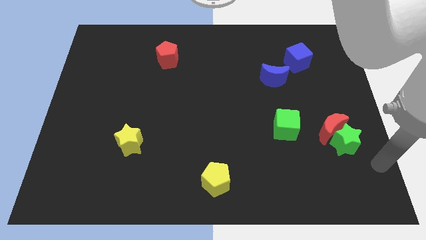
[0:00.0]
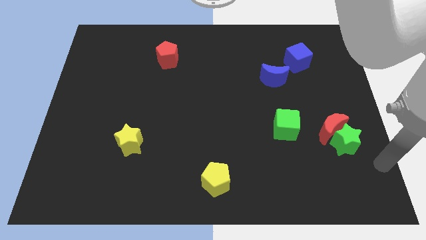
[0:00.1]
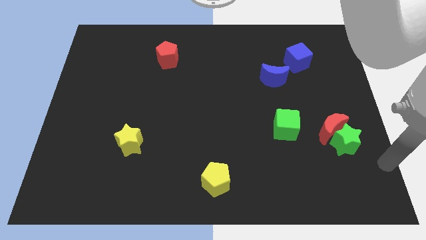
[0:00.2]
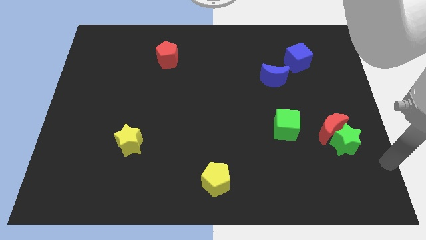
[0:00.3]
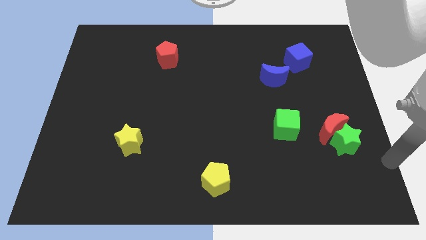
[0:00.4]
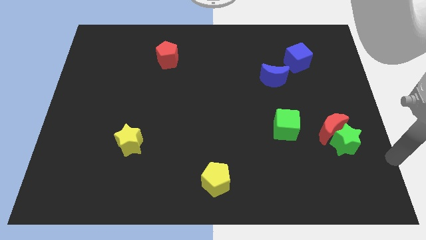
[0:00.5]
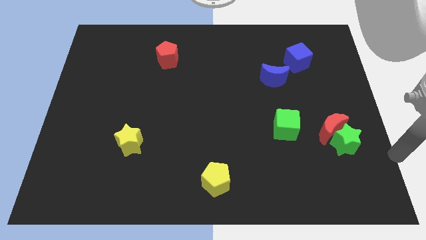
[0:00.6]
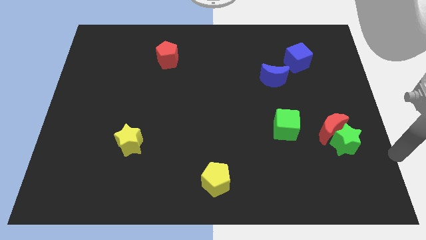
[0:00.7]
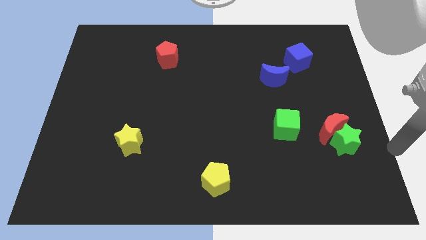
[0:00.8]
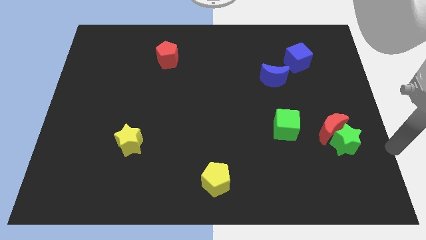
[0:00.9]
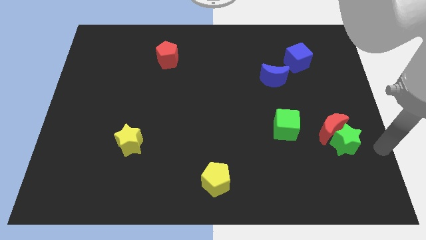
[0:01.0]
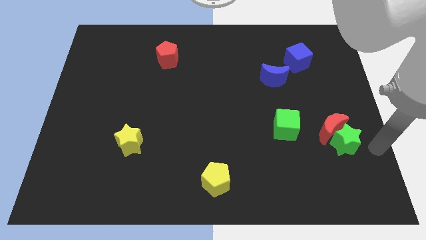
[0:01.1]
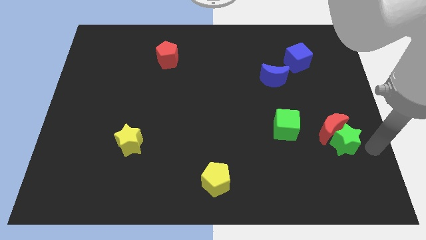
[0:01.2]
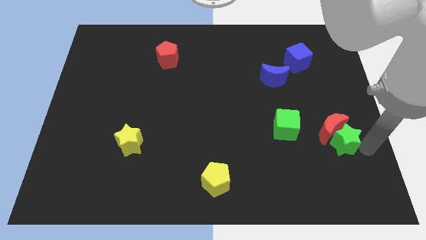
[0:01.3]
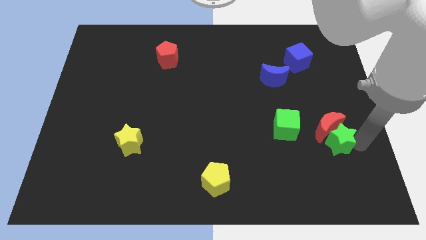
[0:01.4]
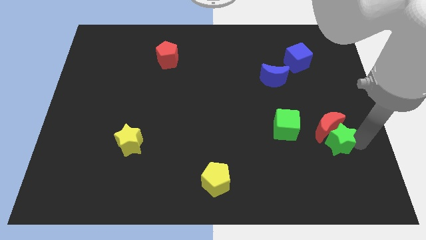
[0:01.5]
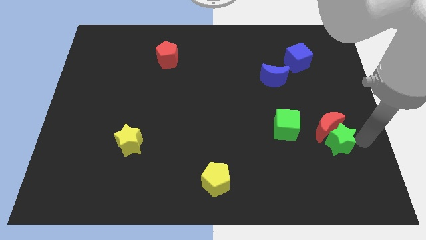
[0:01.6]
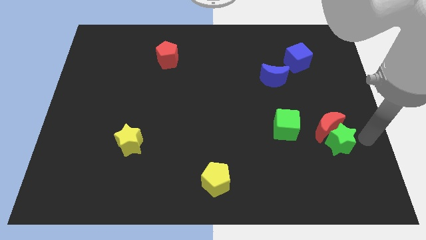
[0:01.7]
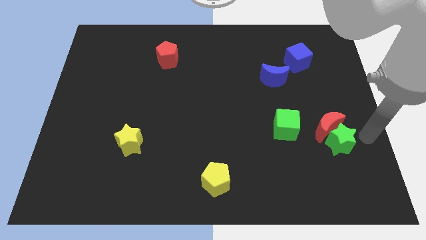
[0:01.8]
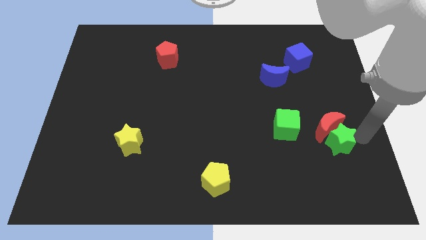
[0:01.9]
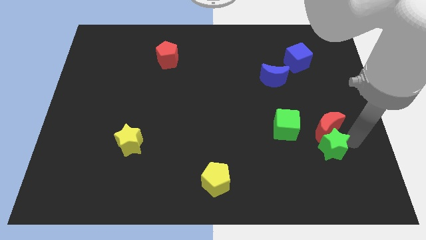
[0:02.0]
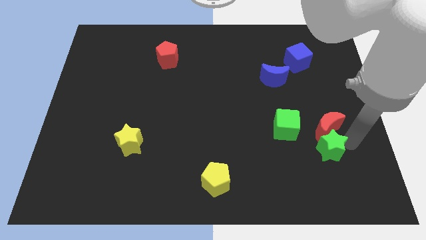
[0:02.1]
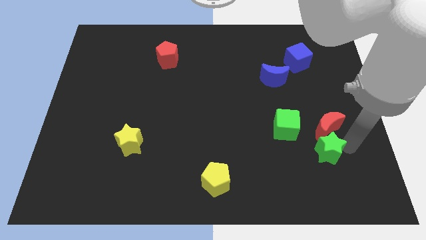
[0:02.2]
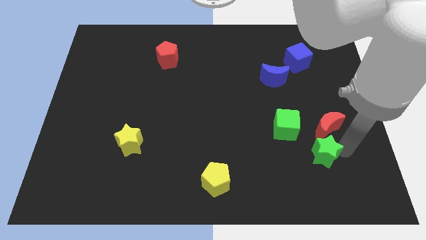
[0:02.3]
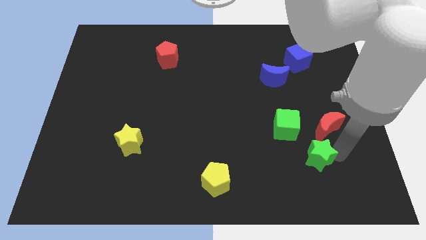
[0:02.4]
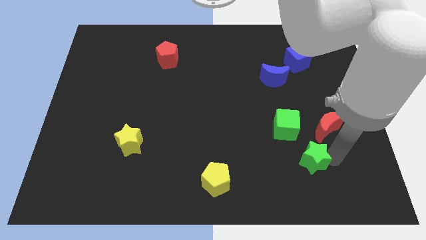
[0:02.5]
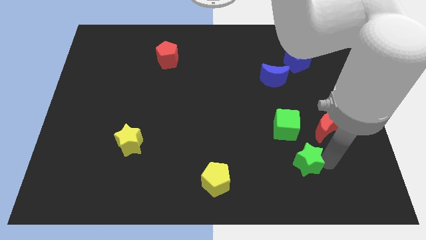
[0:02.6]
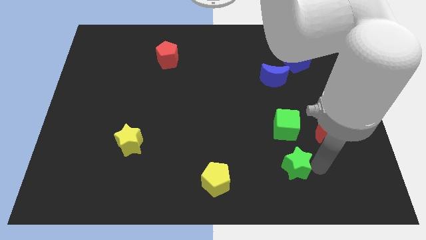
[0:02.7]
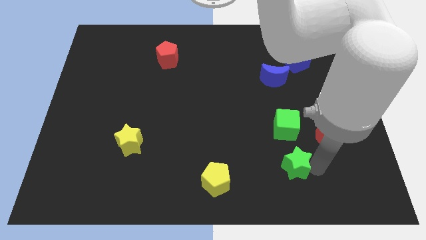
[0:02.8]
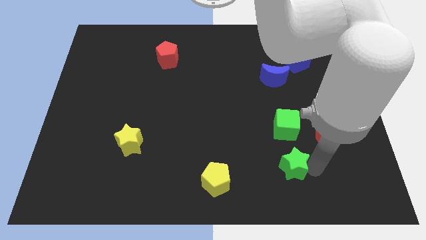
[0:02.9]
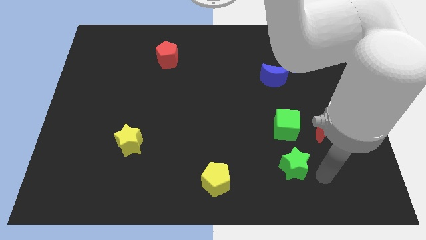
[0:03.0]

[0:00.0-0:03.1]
move the green star to the bottom of the green cube

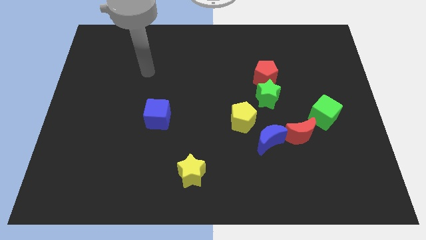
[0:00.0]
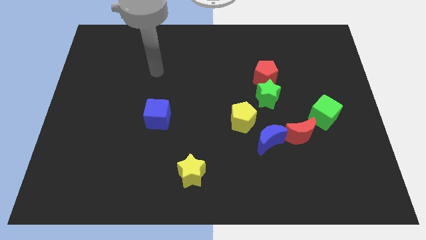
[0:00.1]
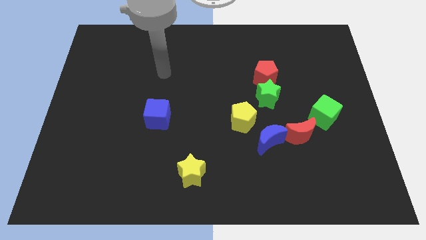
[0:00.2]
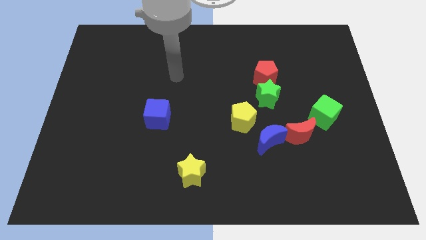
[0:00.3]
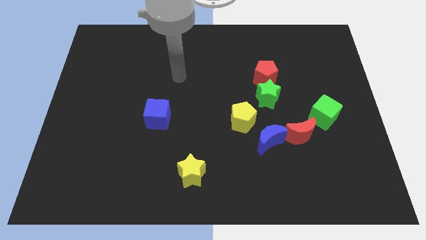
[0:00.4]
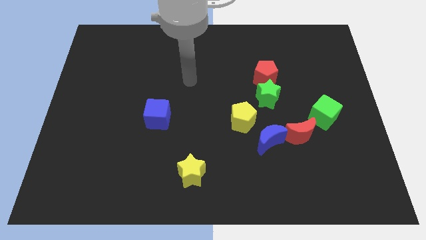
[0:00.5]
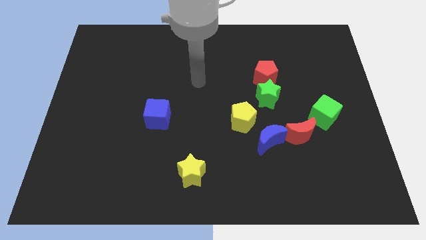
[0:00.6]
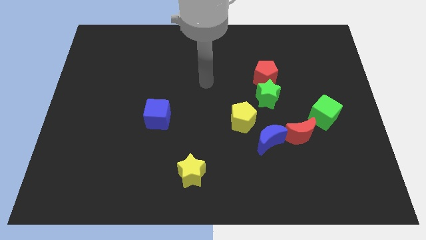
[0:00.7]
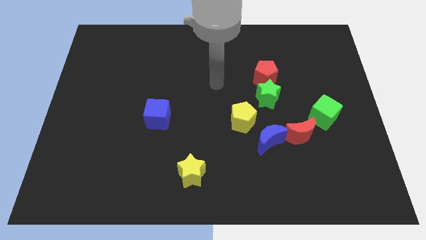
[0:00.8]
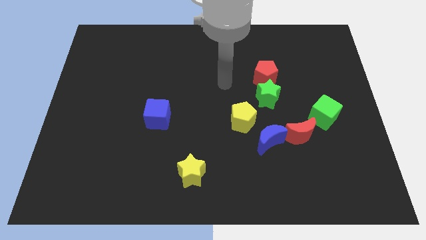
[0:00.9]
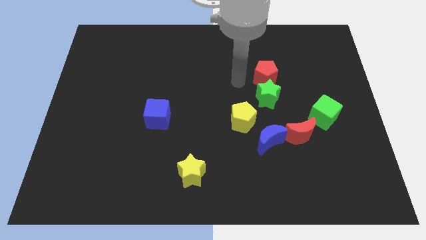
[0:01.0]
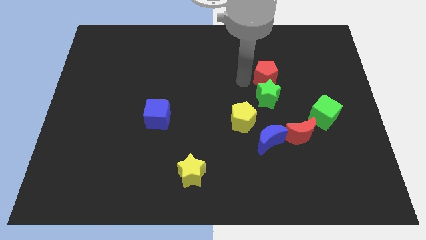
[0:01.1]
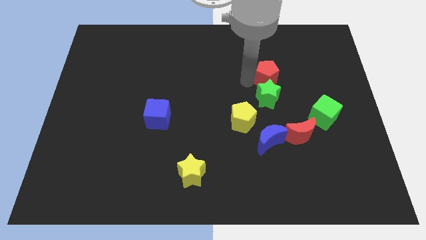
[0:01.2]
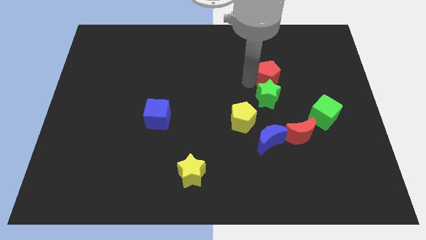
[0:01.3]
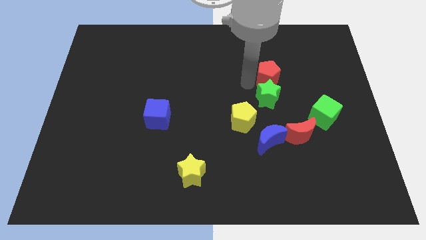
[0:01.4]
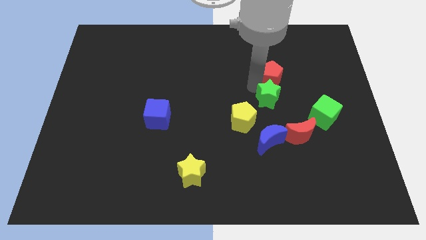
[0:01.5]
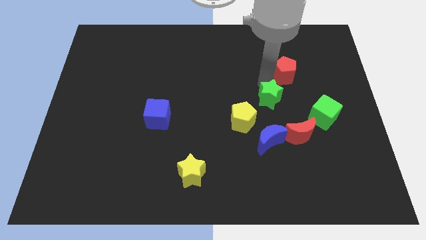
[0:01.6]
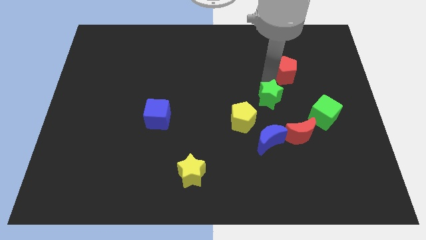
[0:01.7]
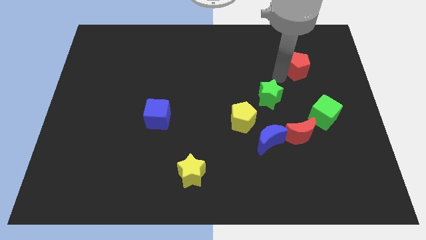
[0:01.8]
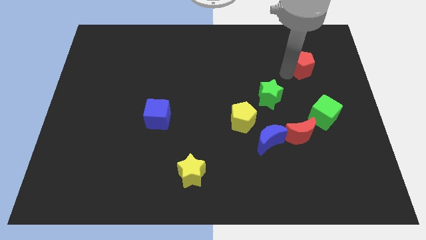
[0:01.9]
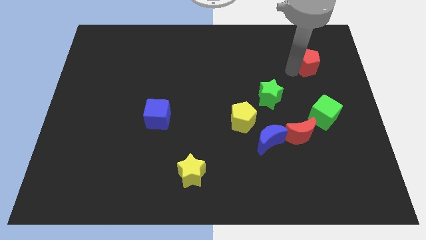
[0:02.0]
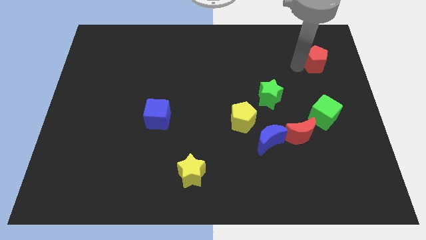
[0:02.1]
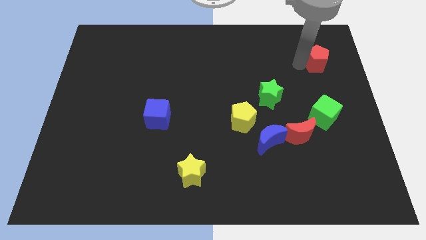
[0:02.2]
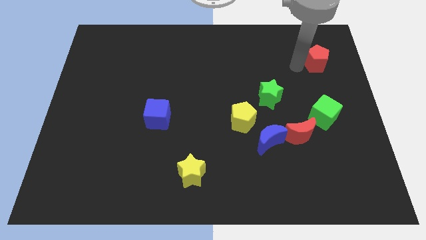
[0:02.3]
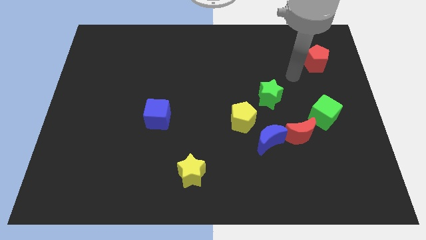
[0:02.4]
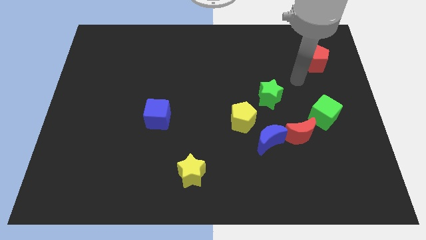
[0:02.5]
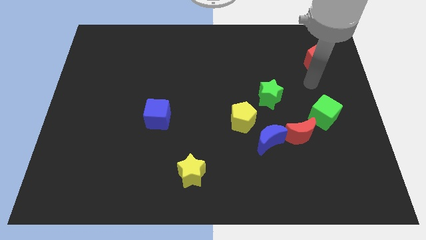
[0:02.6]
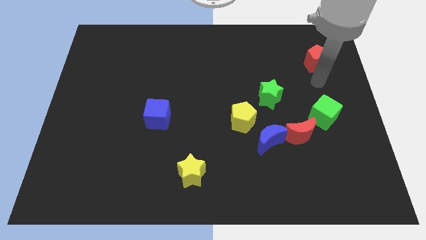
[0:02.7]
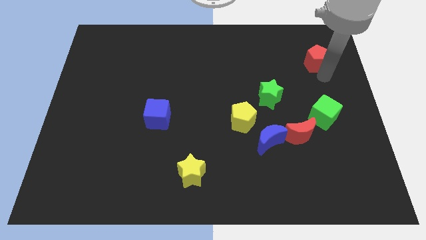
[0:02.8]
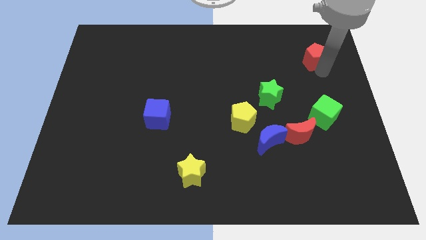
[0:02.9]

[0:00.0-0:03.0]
move red pentagon slightly up

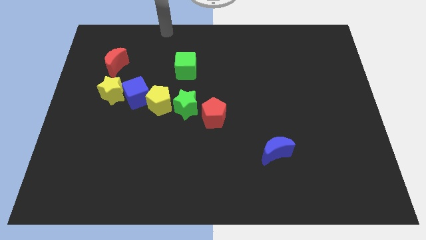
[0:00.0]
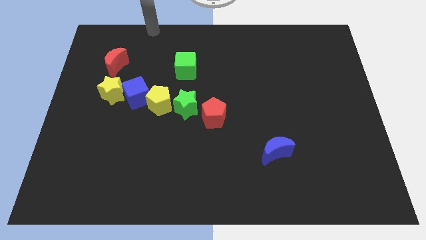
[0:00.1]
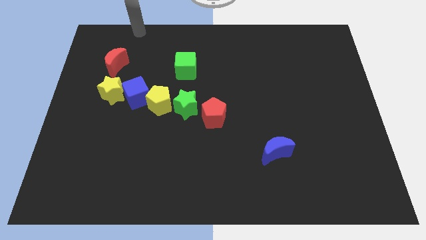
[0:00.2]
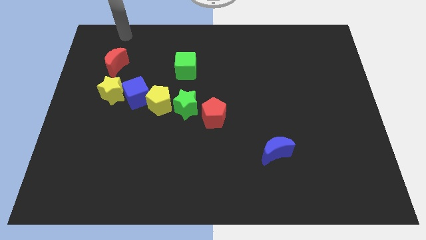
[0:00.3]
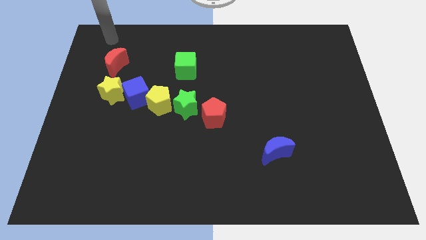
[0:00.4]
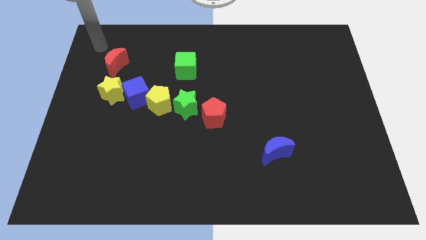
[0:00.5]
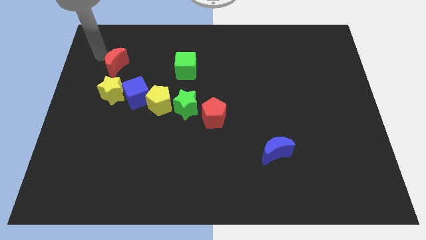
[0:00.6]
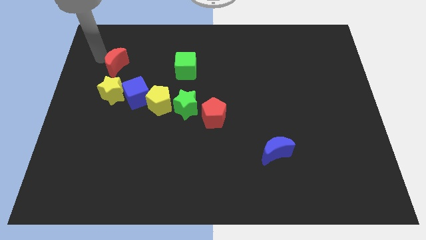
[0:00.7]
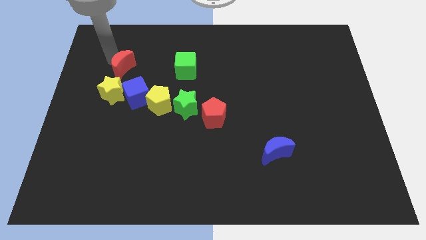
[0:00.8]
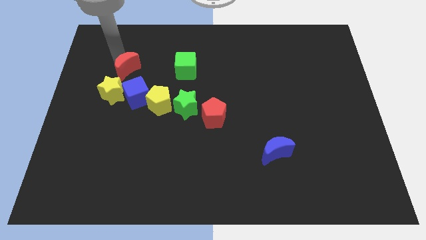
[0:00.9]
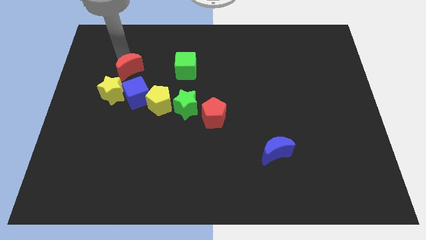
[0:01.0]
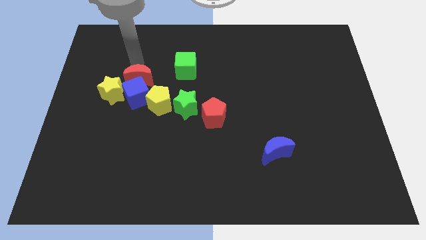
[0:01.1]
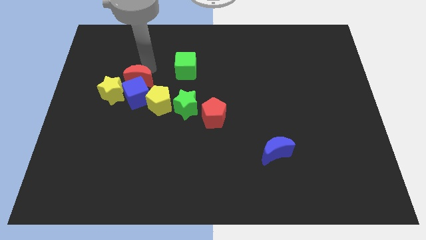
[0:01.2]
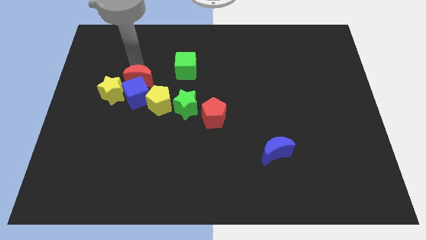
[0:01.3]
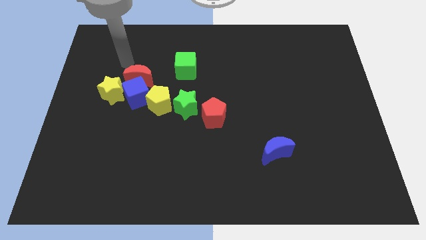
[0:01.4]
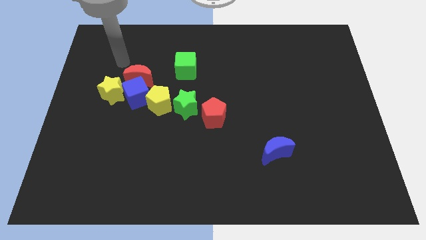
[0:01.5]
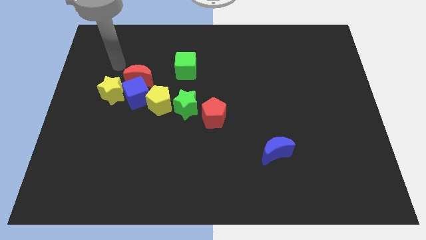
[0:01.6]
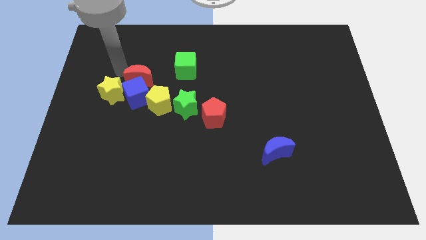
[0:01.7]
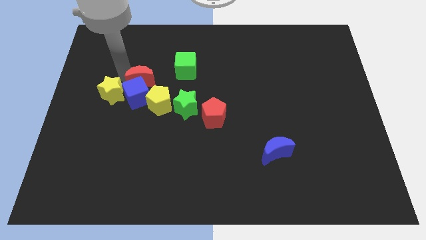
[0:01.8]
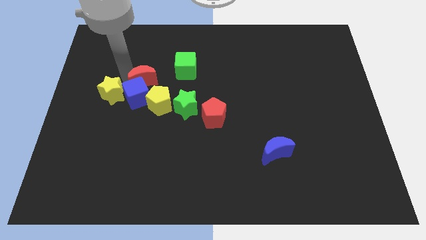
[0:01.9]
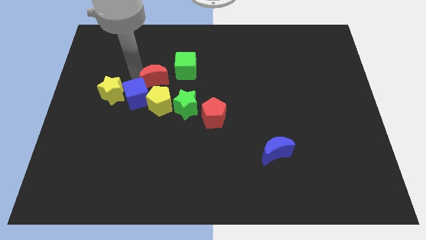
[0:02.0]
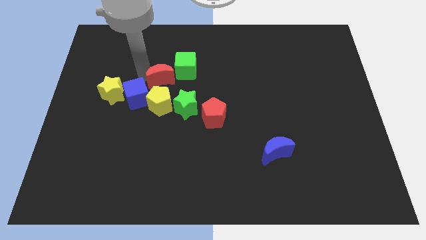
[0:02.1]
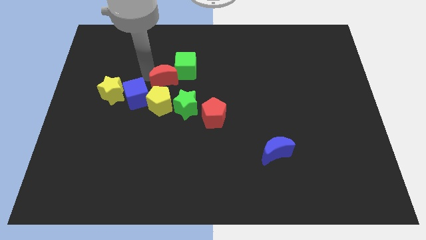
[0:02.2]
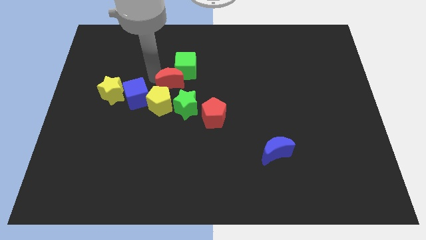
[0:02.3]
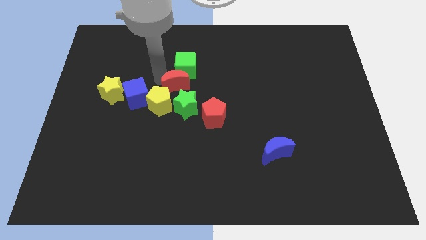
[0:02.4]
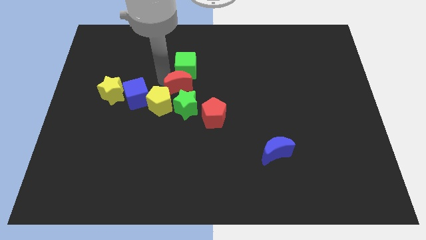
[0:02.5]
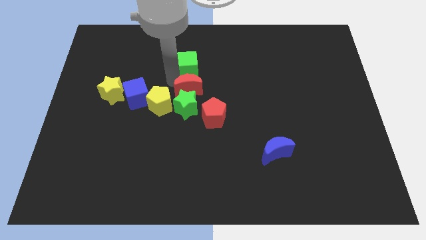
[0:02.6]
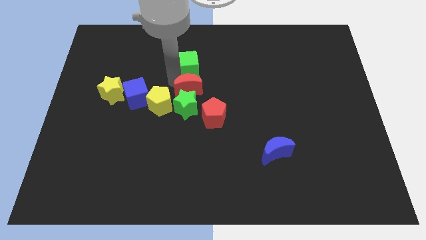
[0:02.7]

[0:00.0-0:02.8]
place the red crescent above the green star

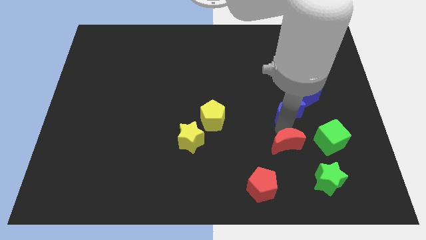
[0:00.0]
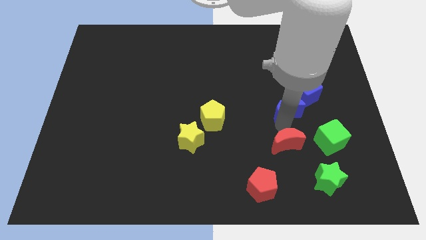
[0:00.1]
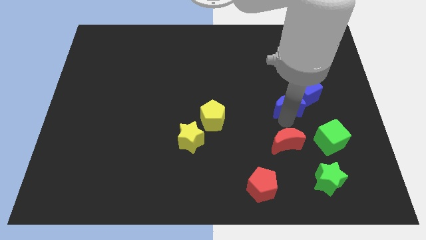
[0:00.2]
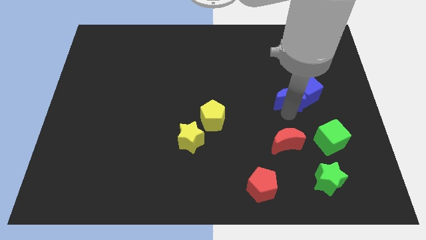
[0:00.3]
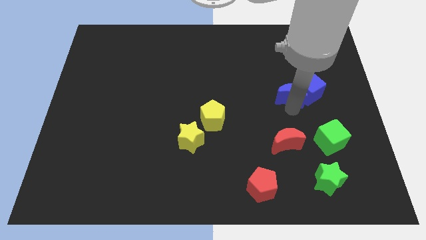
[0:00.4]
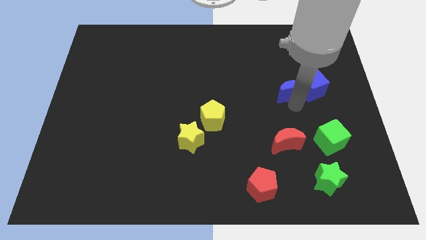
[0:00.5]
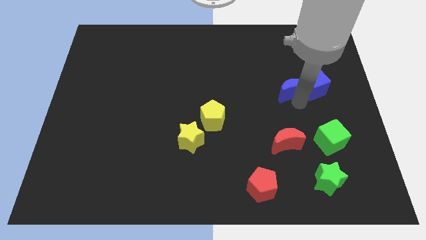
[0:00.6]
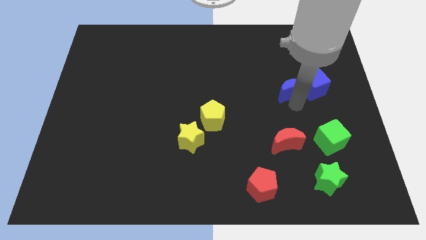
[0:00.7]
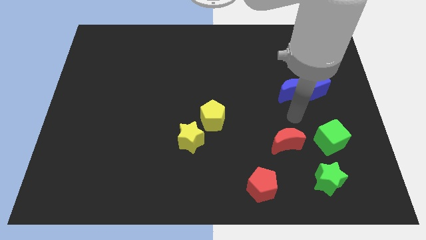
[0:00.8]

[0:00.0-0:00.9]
place the blue crescent to the left of the blue cube
